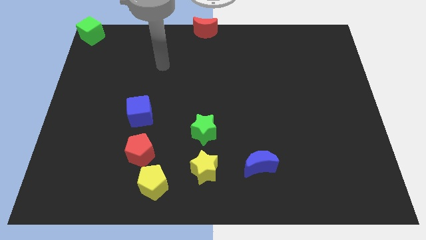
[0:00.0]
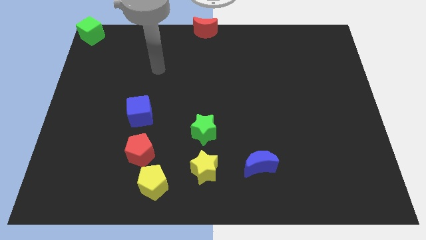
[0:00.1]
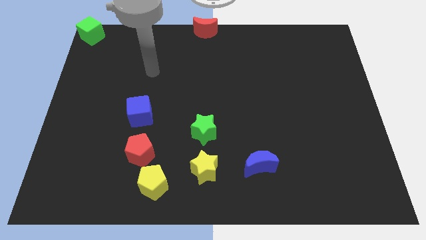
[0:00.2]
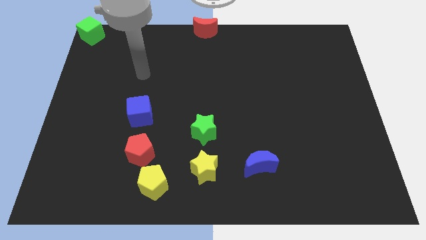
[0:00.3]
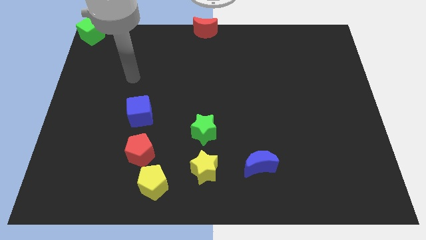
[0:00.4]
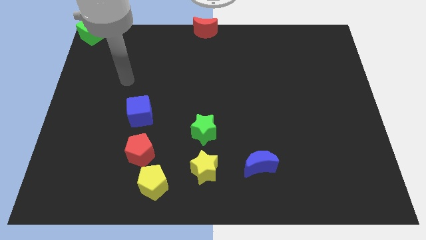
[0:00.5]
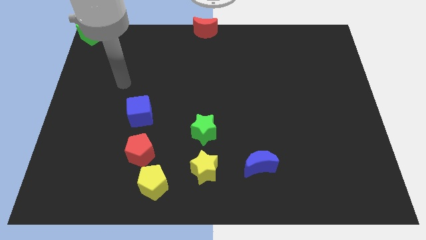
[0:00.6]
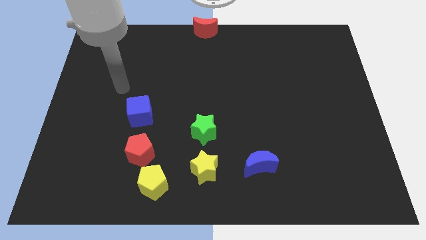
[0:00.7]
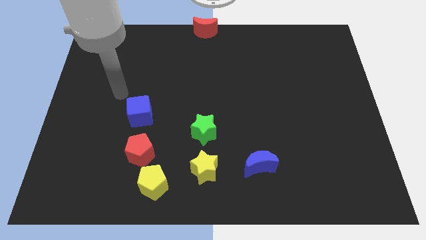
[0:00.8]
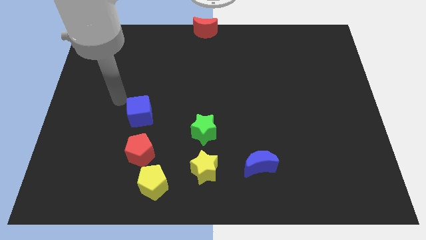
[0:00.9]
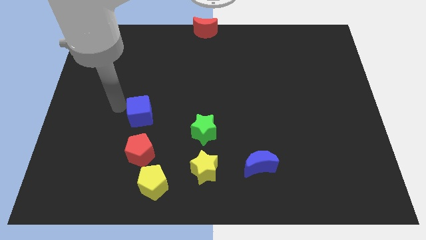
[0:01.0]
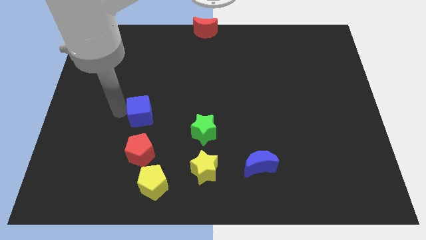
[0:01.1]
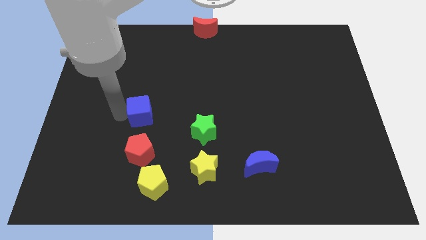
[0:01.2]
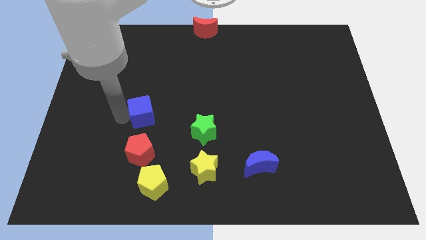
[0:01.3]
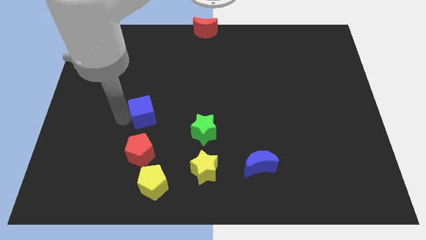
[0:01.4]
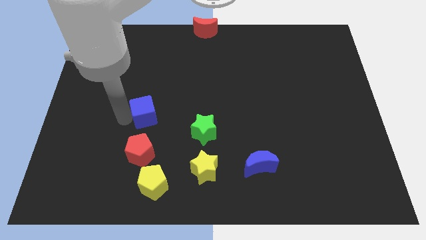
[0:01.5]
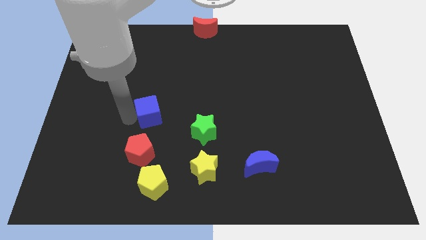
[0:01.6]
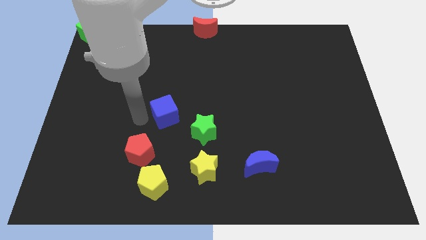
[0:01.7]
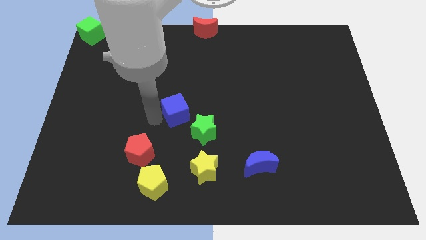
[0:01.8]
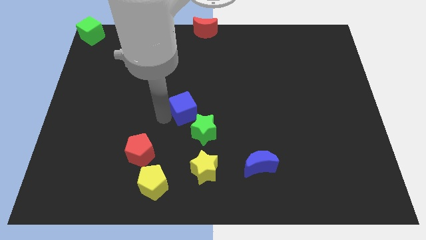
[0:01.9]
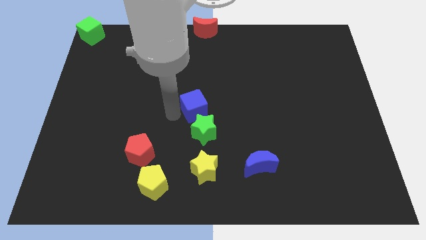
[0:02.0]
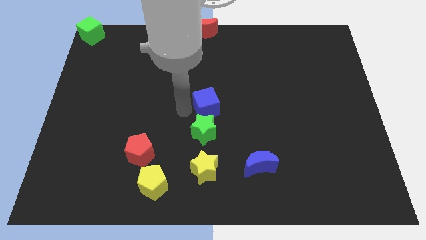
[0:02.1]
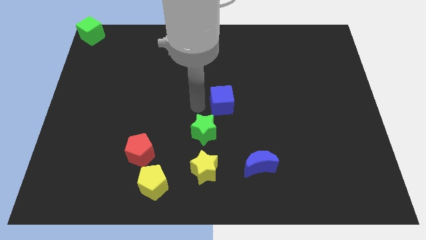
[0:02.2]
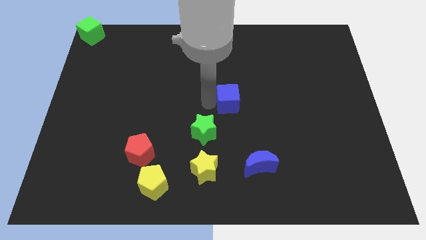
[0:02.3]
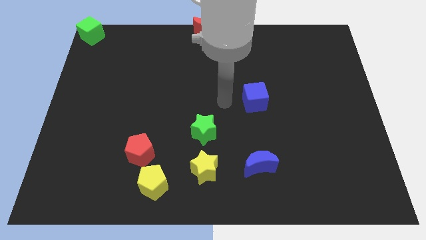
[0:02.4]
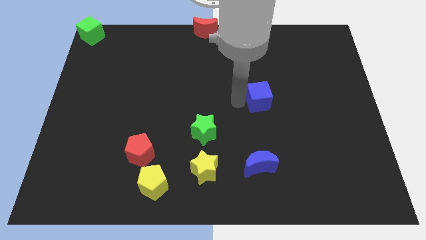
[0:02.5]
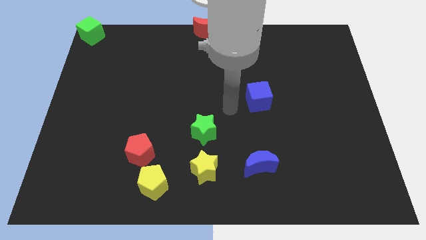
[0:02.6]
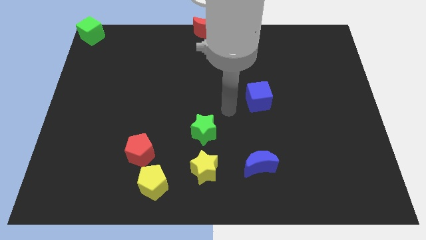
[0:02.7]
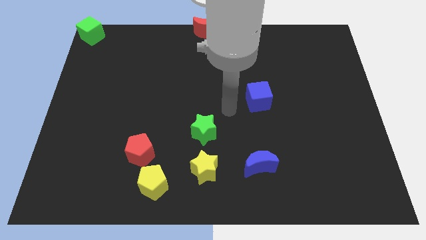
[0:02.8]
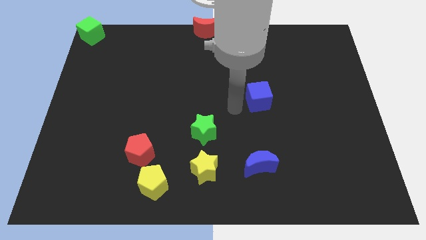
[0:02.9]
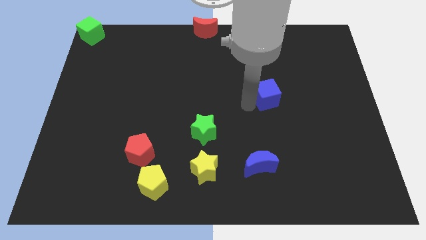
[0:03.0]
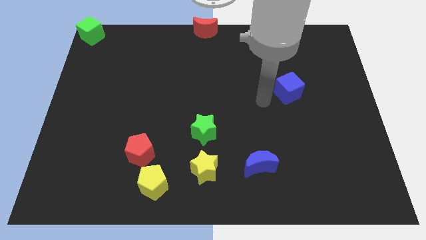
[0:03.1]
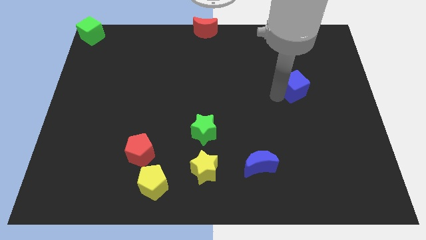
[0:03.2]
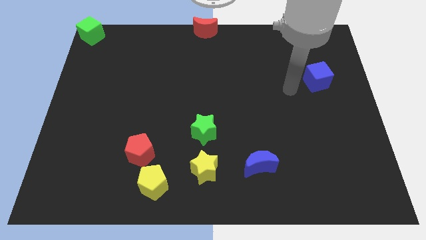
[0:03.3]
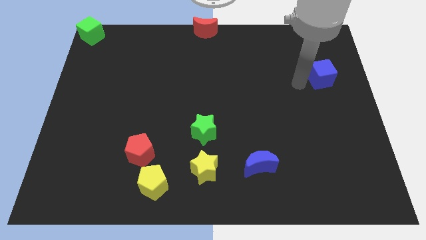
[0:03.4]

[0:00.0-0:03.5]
drag the blue cube diagonally top right to the blue moon

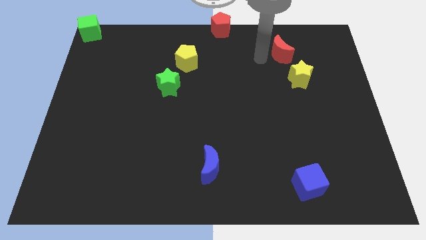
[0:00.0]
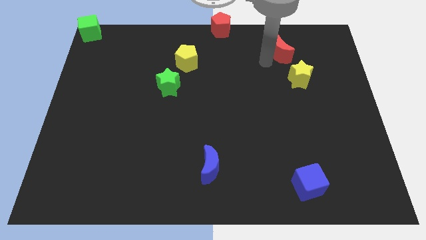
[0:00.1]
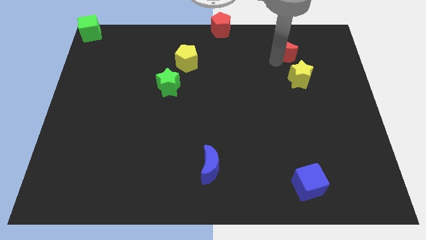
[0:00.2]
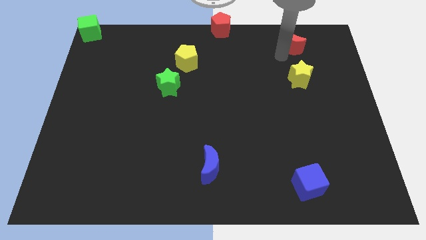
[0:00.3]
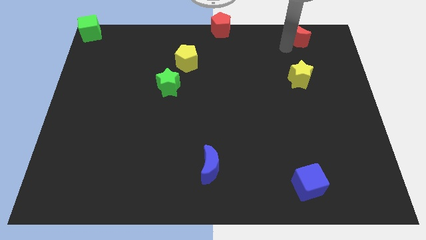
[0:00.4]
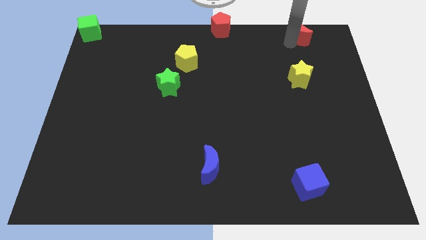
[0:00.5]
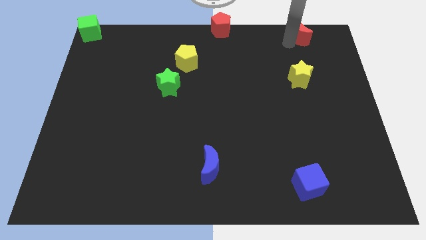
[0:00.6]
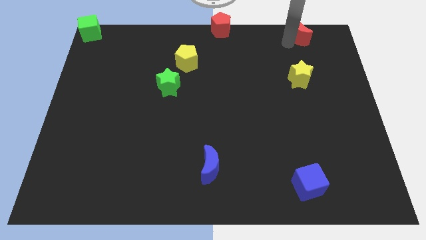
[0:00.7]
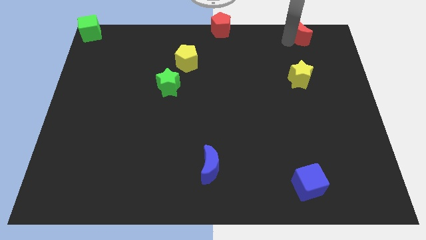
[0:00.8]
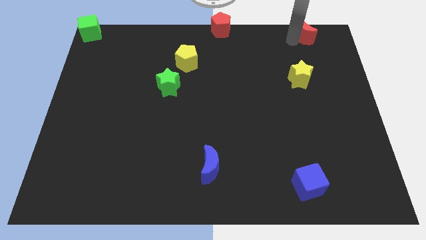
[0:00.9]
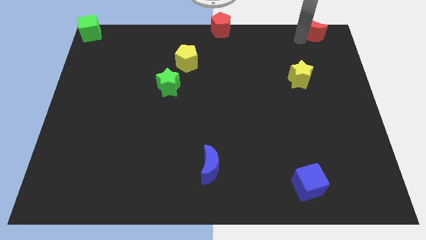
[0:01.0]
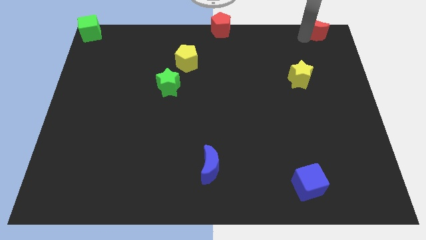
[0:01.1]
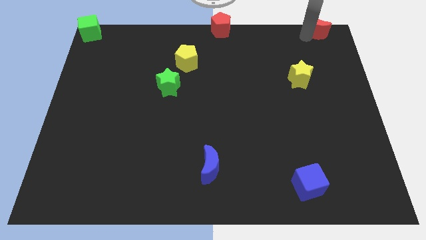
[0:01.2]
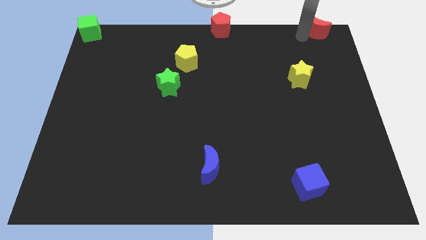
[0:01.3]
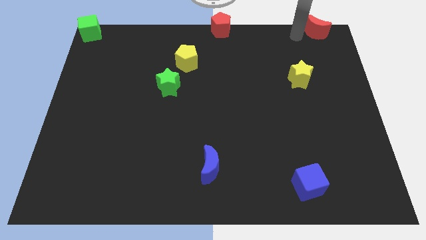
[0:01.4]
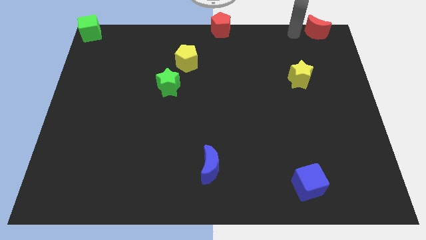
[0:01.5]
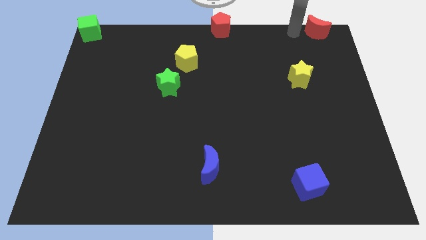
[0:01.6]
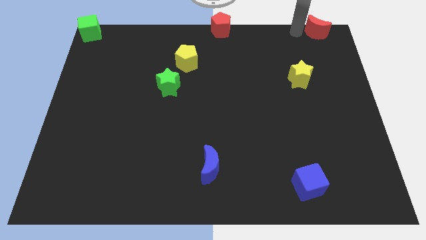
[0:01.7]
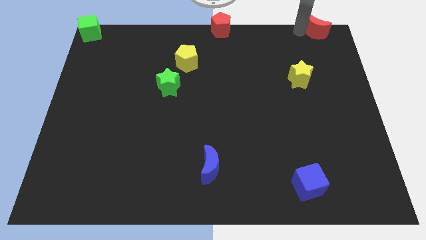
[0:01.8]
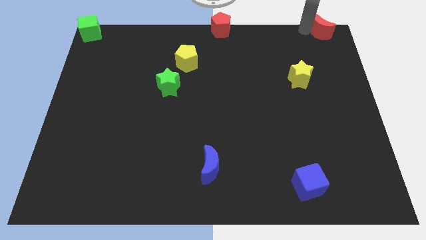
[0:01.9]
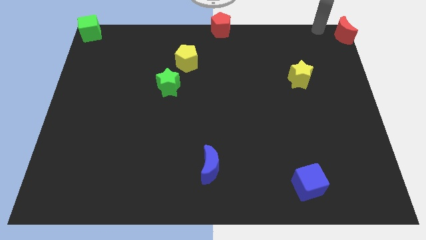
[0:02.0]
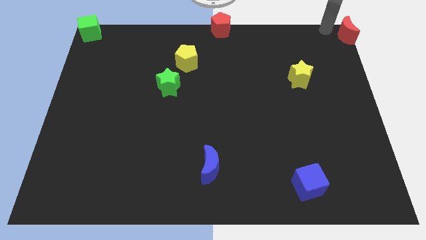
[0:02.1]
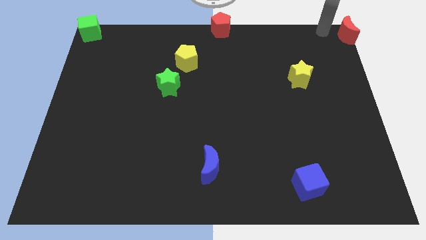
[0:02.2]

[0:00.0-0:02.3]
push the red moon to the top right corner of the board

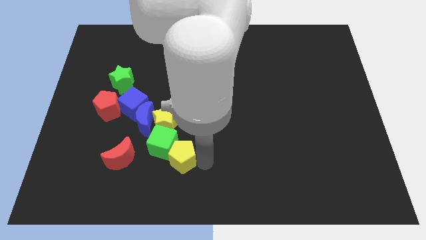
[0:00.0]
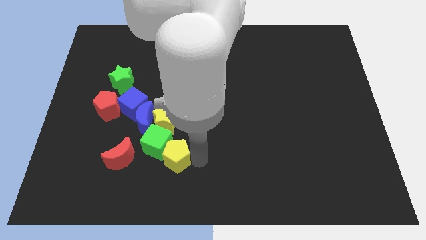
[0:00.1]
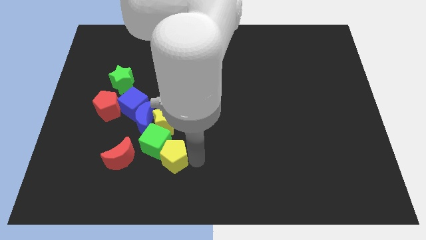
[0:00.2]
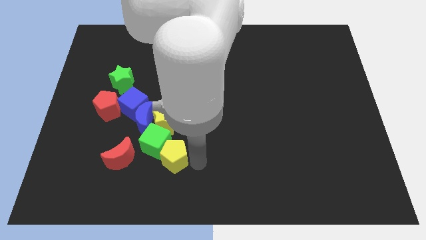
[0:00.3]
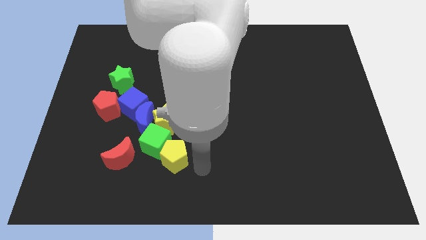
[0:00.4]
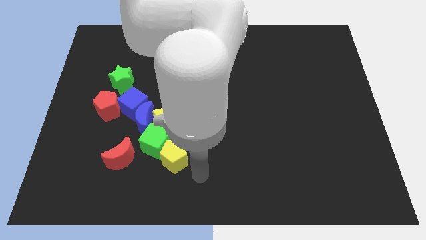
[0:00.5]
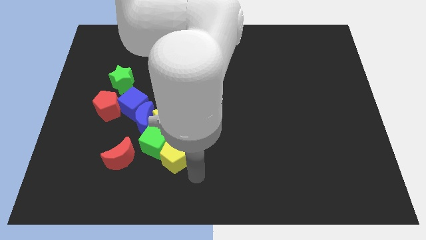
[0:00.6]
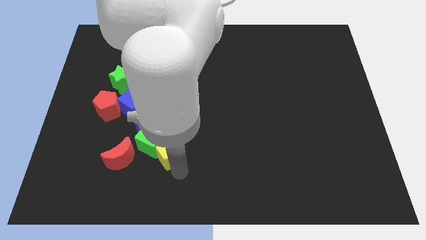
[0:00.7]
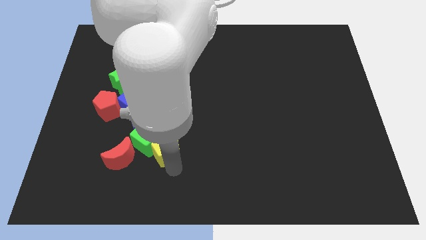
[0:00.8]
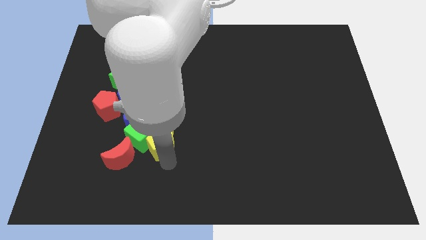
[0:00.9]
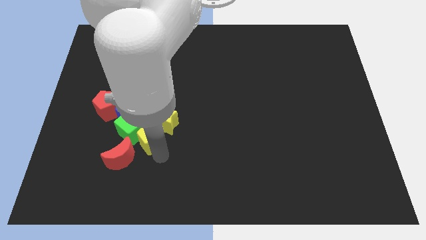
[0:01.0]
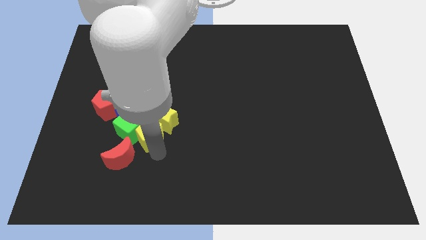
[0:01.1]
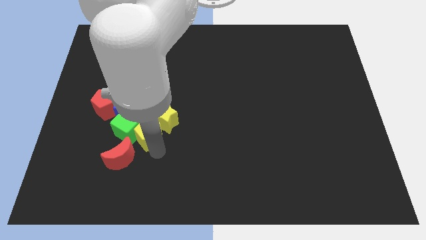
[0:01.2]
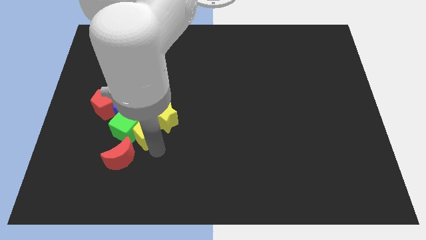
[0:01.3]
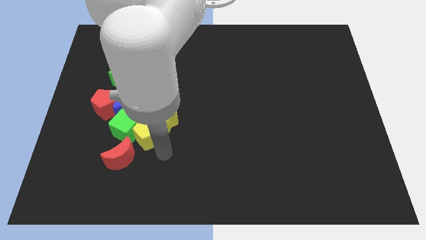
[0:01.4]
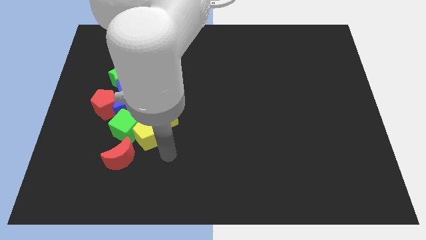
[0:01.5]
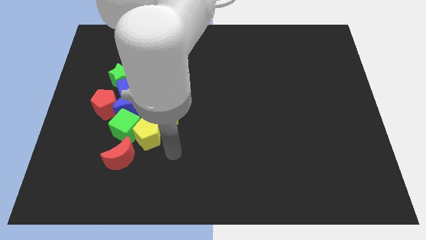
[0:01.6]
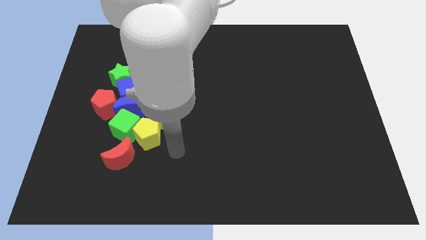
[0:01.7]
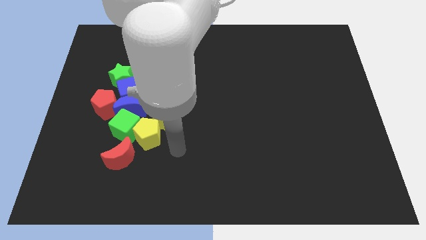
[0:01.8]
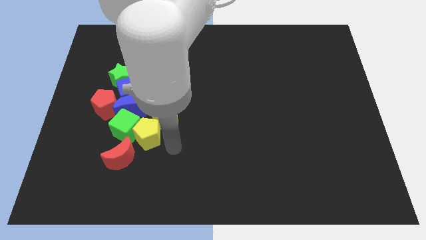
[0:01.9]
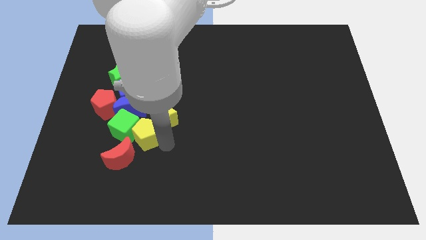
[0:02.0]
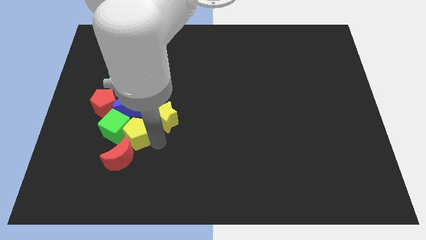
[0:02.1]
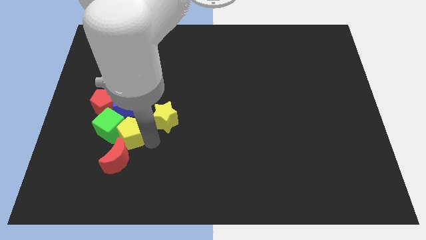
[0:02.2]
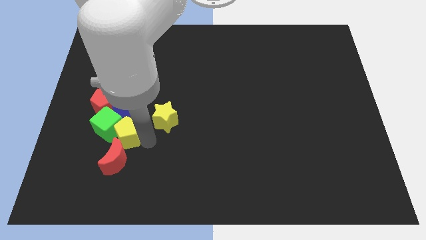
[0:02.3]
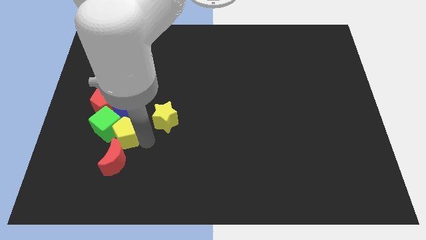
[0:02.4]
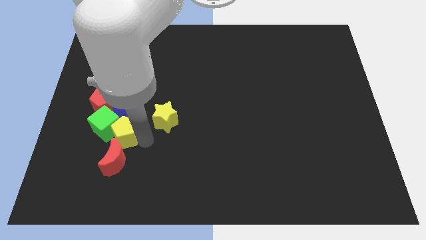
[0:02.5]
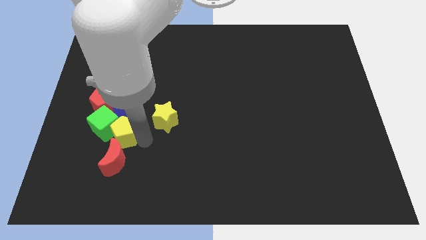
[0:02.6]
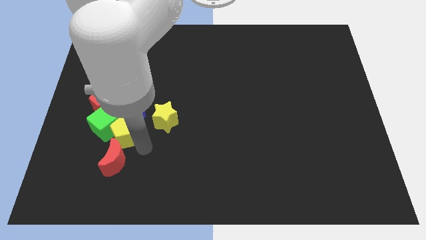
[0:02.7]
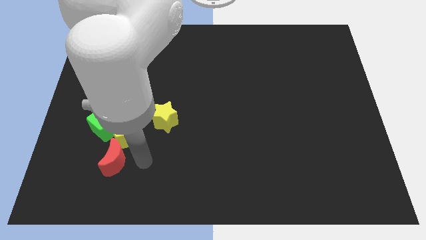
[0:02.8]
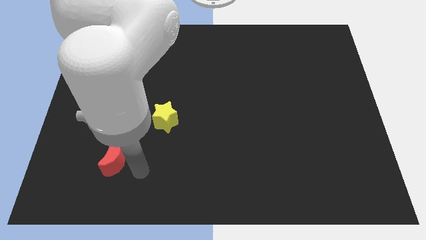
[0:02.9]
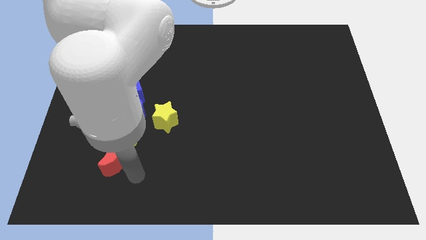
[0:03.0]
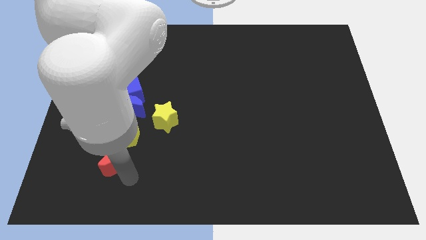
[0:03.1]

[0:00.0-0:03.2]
move yellow pentagon and the green cube towards left center of the board

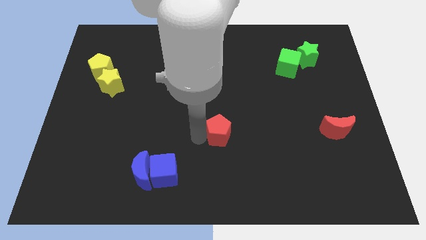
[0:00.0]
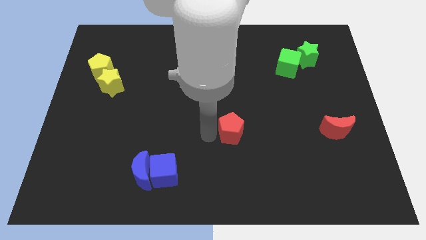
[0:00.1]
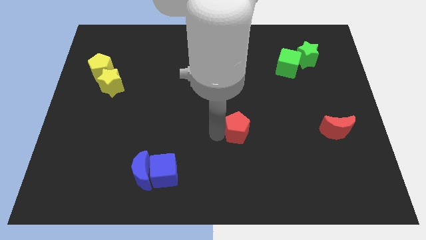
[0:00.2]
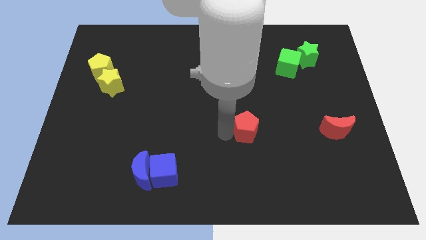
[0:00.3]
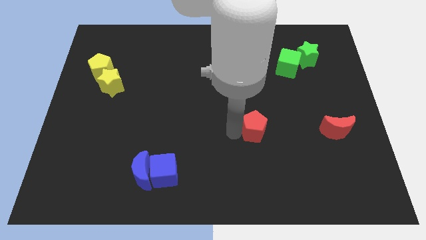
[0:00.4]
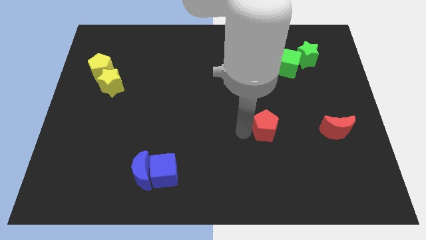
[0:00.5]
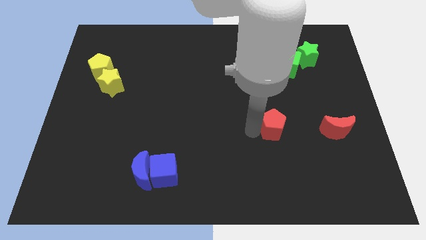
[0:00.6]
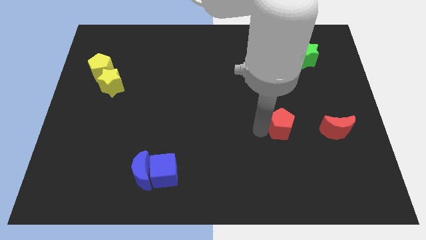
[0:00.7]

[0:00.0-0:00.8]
move the red pentagon slightly to the right
